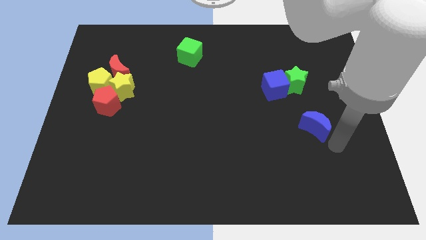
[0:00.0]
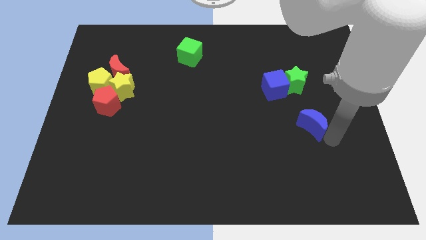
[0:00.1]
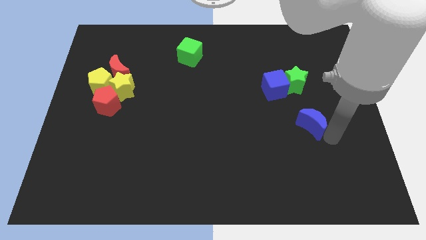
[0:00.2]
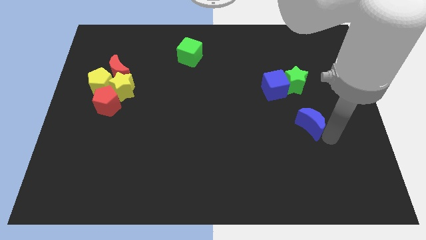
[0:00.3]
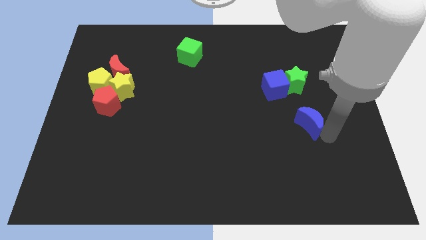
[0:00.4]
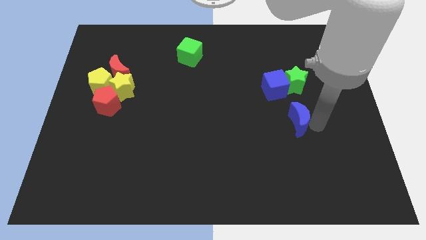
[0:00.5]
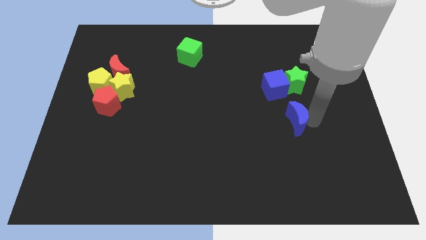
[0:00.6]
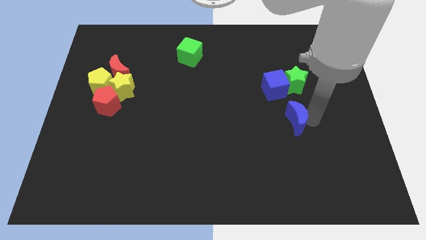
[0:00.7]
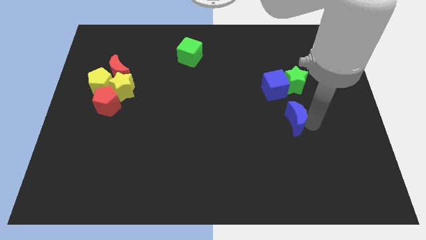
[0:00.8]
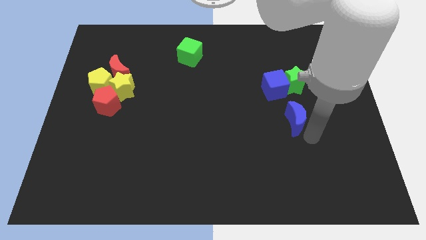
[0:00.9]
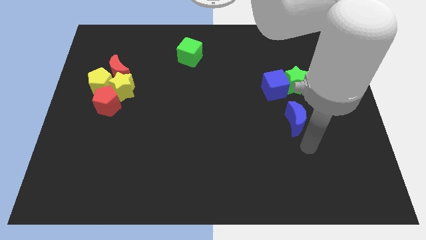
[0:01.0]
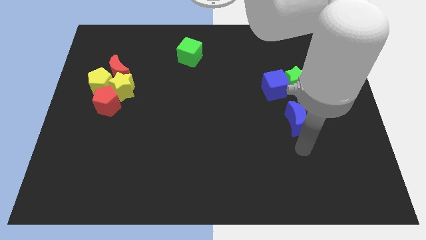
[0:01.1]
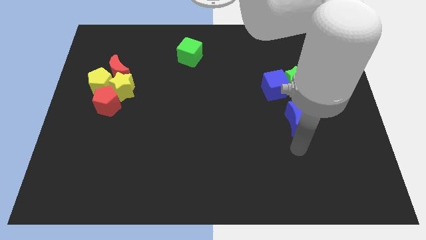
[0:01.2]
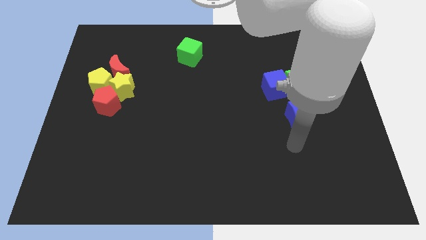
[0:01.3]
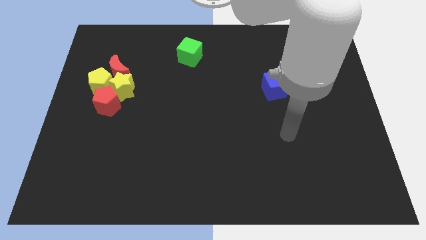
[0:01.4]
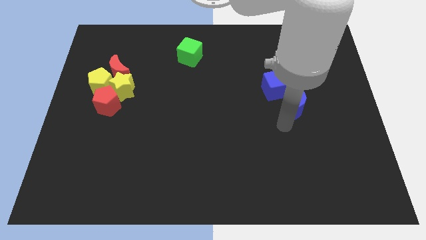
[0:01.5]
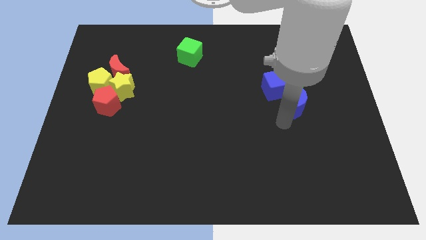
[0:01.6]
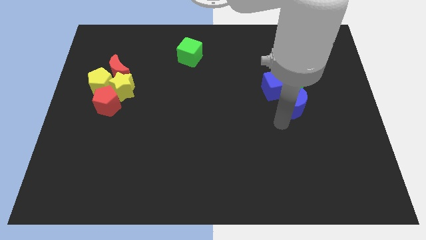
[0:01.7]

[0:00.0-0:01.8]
place the blue moon underneath the green star

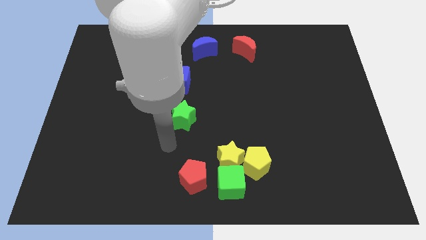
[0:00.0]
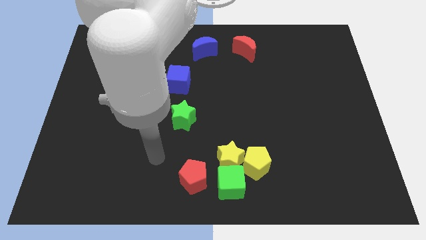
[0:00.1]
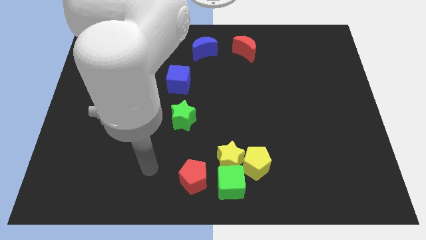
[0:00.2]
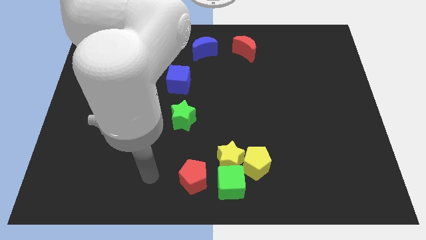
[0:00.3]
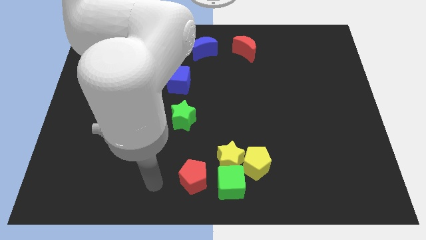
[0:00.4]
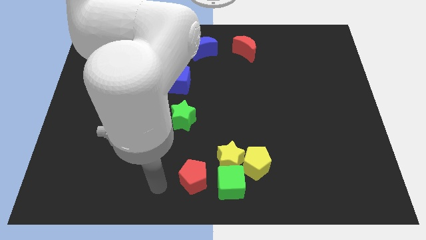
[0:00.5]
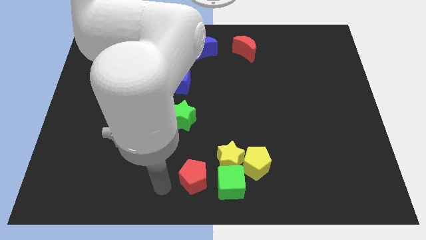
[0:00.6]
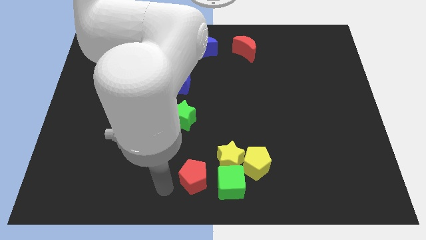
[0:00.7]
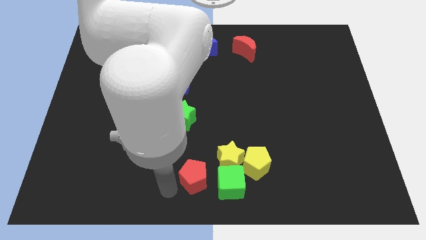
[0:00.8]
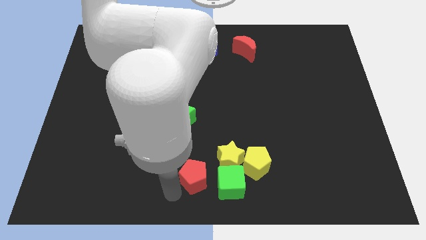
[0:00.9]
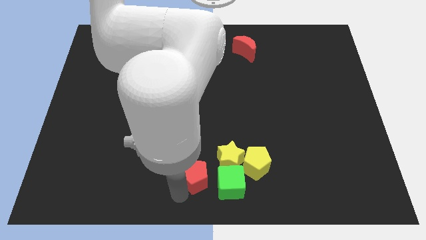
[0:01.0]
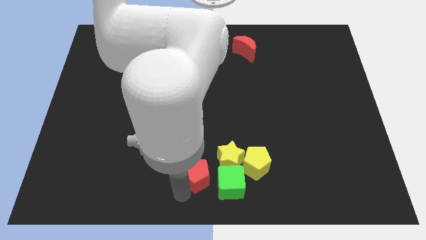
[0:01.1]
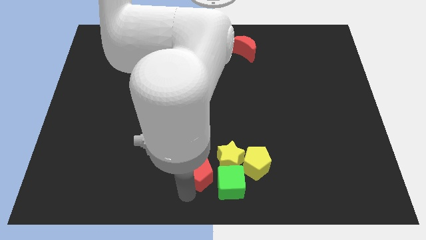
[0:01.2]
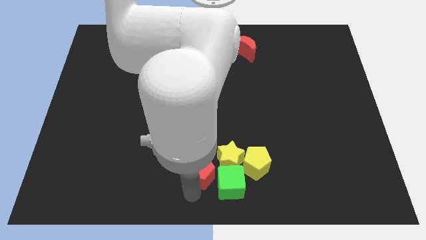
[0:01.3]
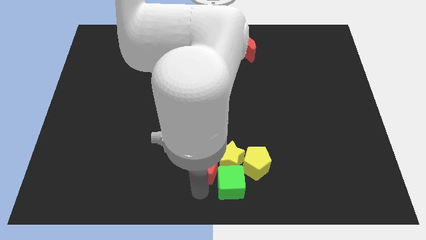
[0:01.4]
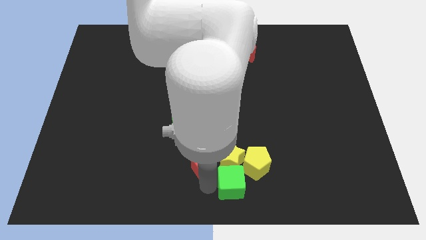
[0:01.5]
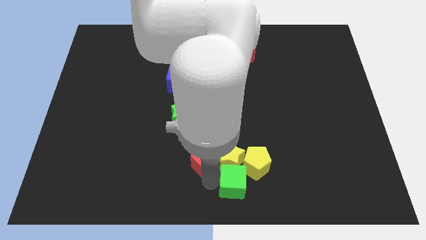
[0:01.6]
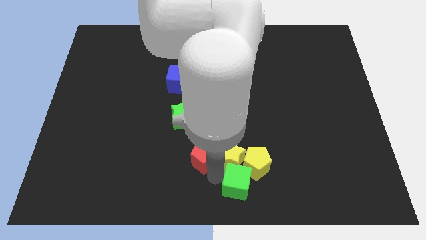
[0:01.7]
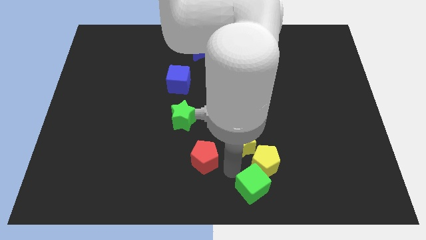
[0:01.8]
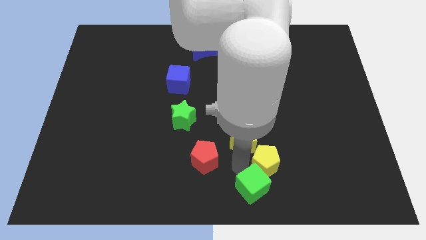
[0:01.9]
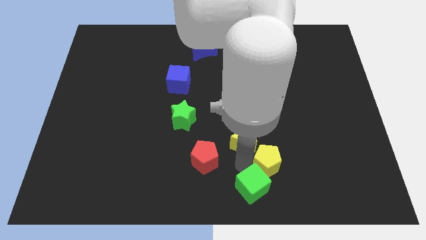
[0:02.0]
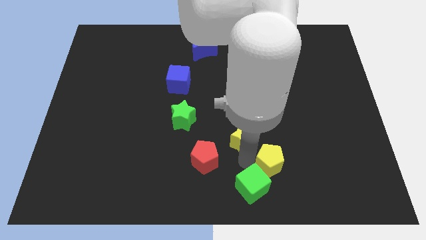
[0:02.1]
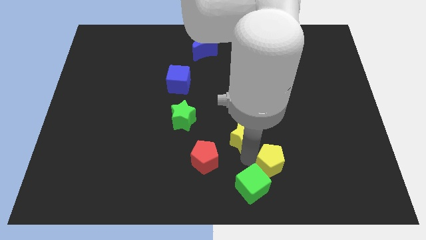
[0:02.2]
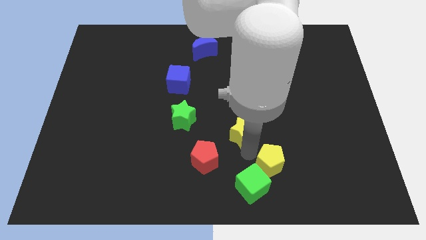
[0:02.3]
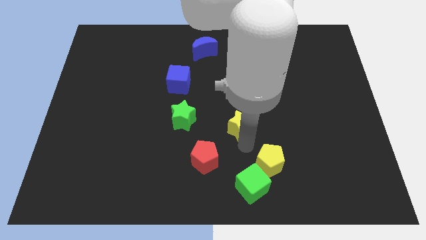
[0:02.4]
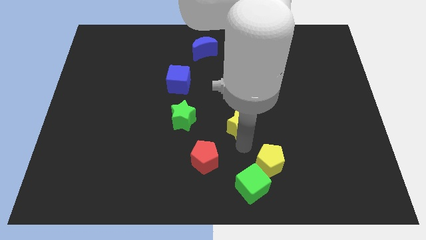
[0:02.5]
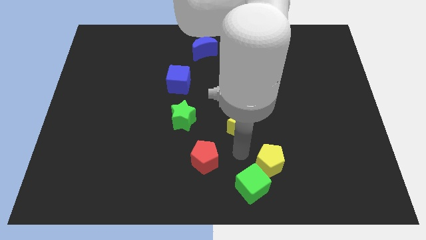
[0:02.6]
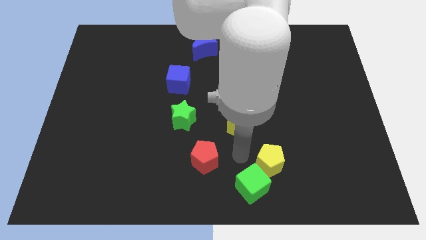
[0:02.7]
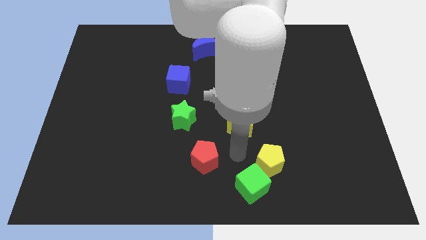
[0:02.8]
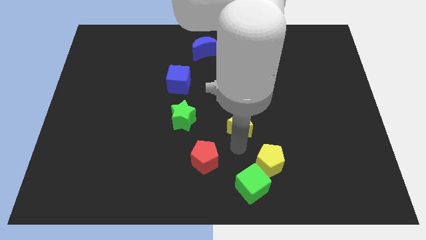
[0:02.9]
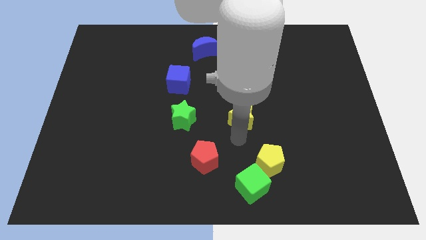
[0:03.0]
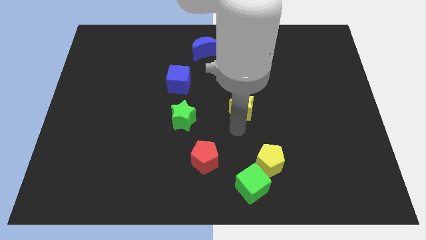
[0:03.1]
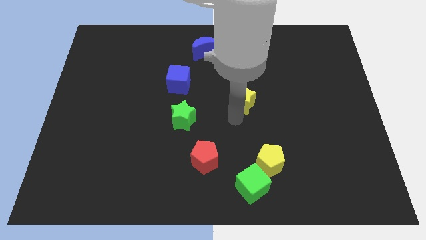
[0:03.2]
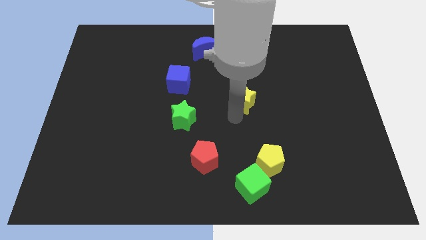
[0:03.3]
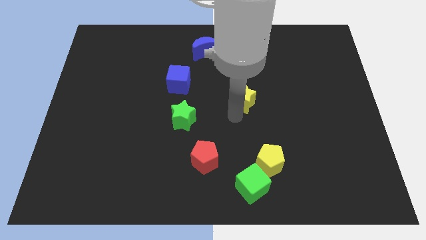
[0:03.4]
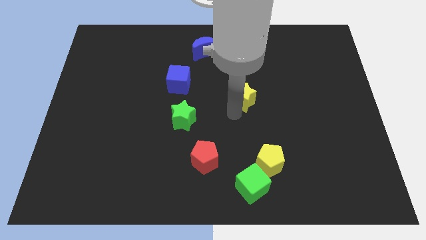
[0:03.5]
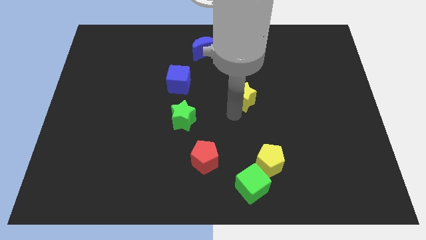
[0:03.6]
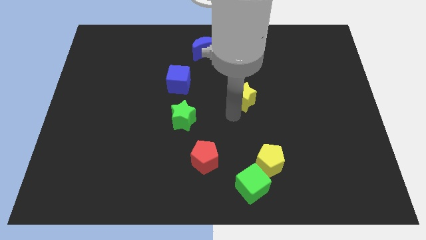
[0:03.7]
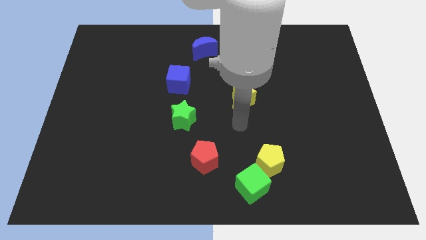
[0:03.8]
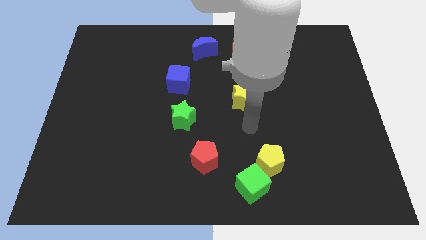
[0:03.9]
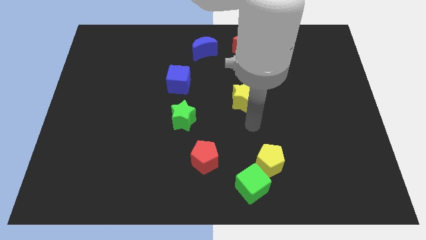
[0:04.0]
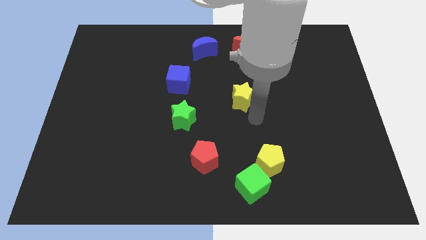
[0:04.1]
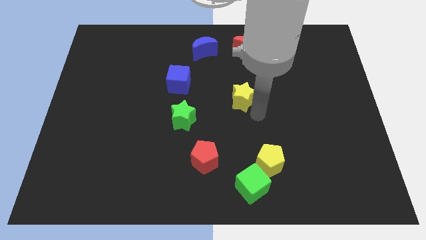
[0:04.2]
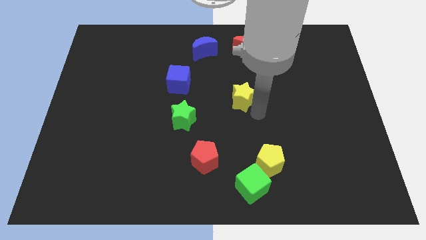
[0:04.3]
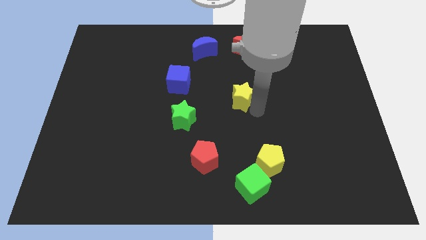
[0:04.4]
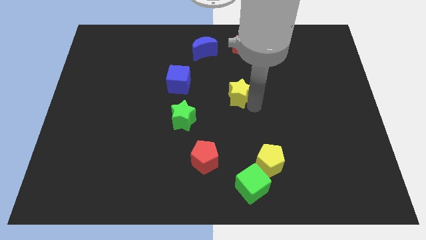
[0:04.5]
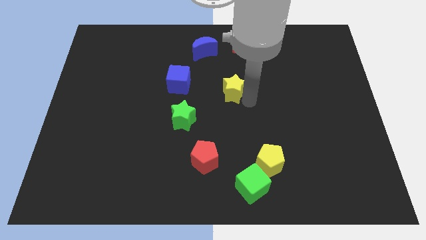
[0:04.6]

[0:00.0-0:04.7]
separate yellow star from the group of blocks

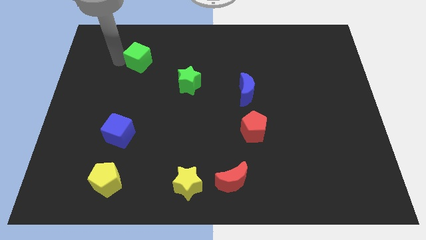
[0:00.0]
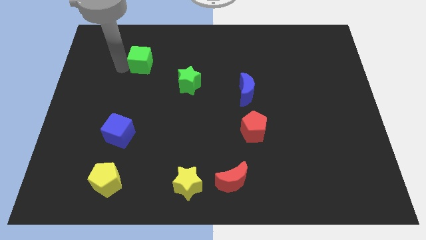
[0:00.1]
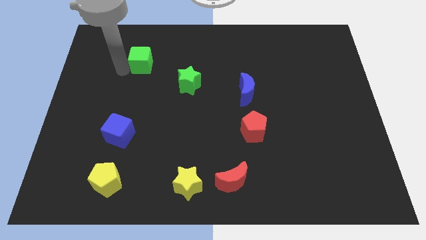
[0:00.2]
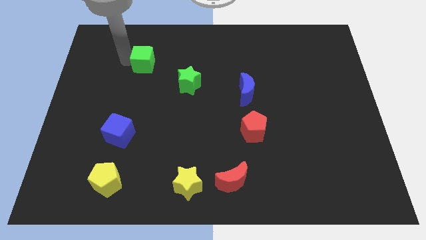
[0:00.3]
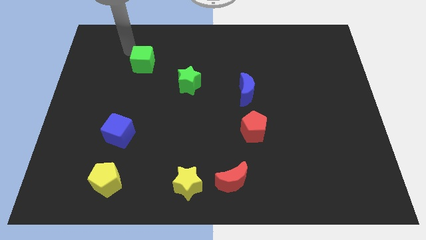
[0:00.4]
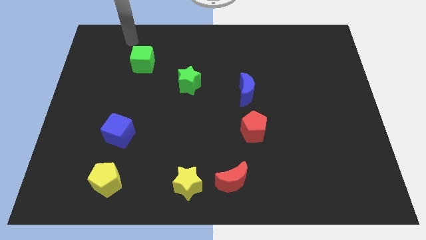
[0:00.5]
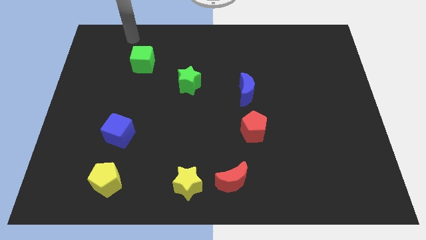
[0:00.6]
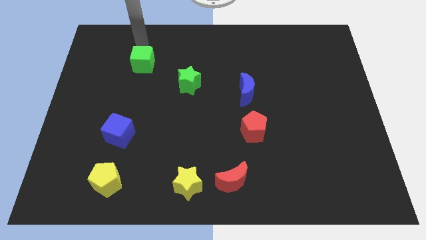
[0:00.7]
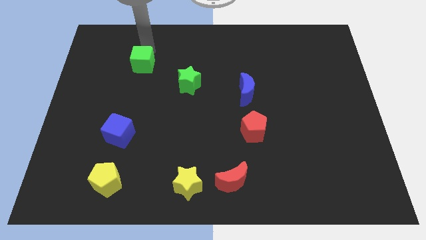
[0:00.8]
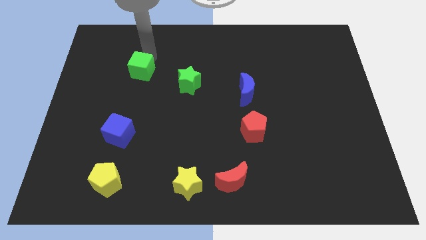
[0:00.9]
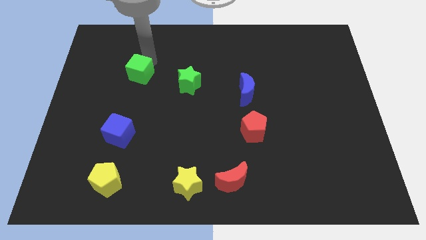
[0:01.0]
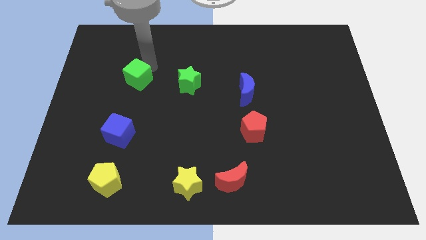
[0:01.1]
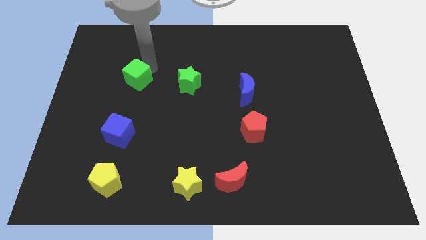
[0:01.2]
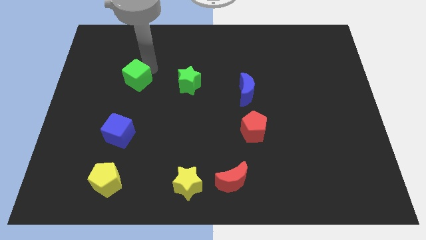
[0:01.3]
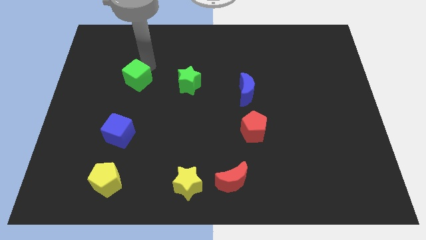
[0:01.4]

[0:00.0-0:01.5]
move the green cube diagonally top left to green star

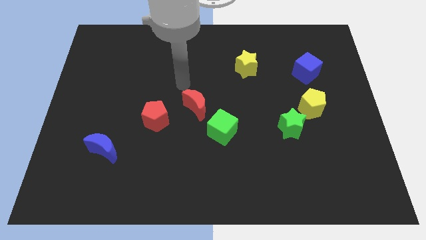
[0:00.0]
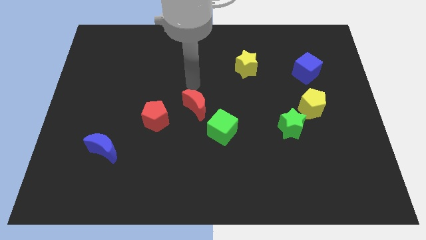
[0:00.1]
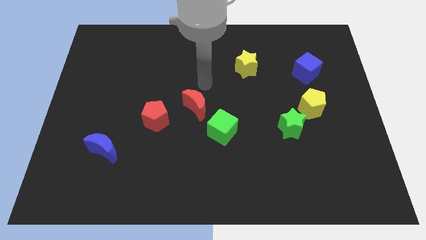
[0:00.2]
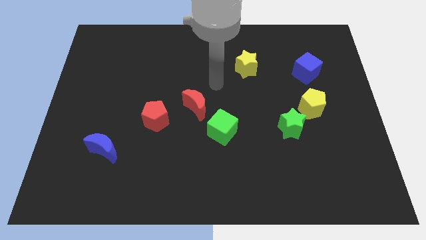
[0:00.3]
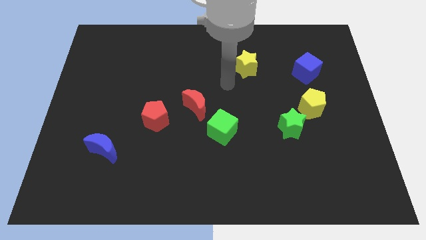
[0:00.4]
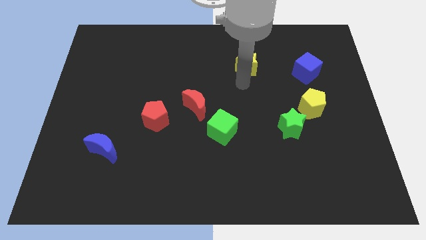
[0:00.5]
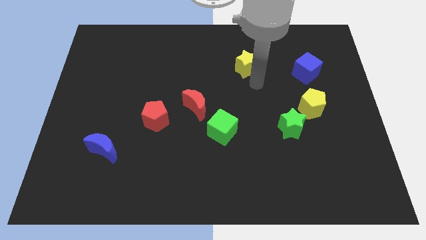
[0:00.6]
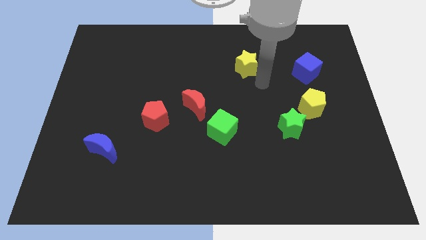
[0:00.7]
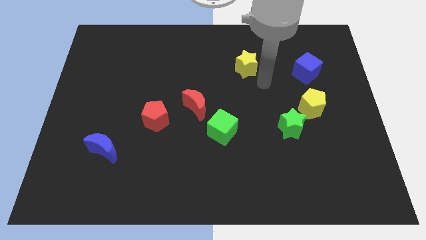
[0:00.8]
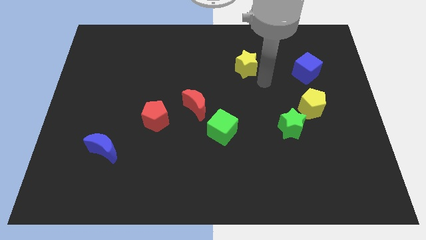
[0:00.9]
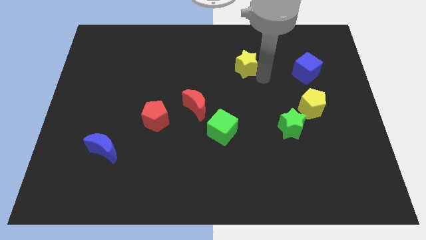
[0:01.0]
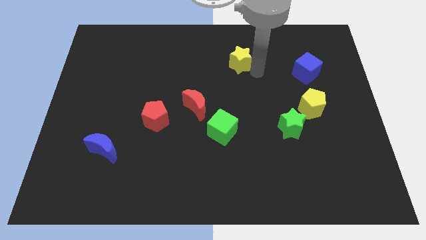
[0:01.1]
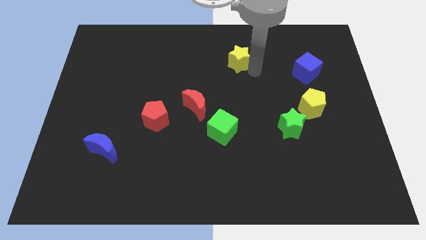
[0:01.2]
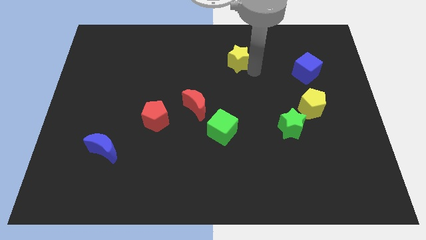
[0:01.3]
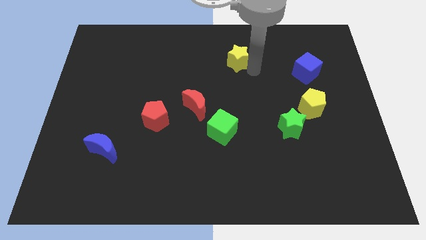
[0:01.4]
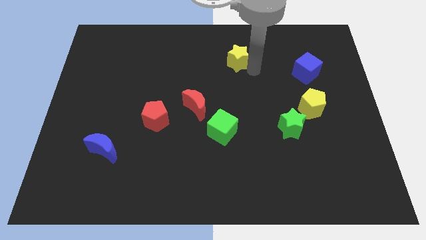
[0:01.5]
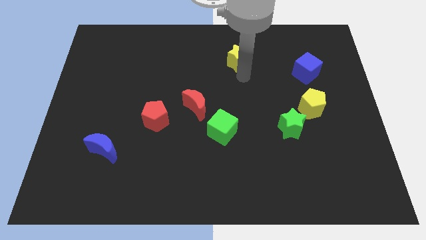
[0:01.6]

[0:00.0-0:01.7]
slightly push the yellow star towards the top side
